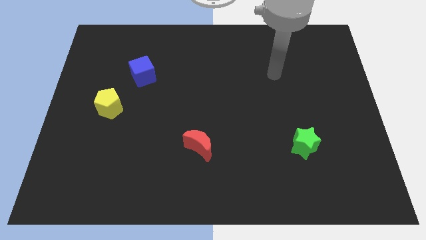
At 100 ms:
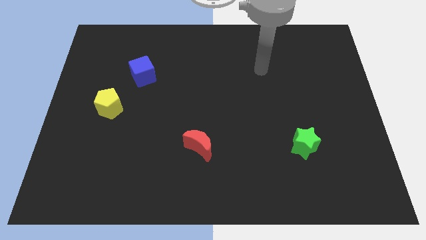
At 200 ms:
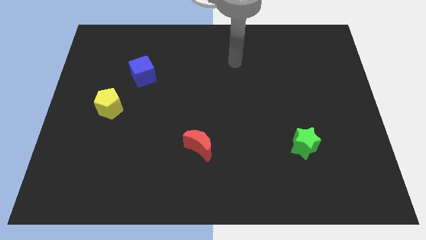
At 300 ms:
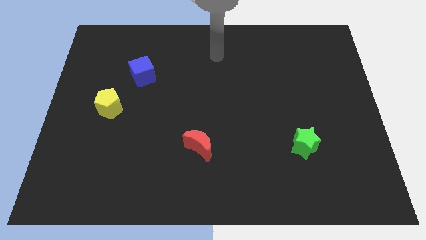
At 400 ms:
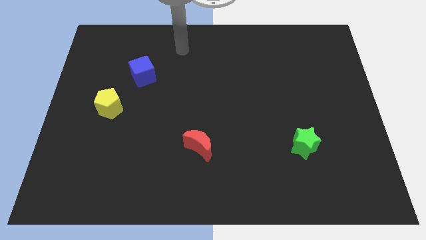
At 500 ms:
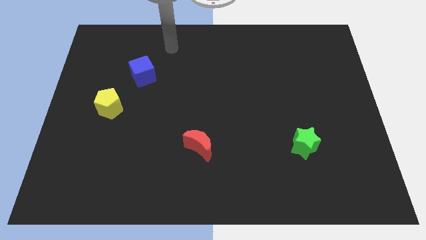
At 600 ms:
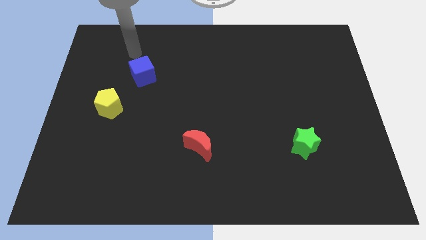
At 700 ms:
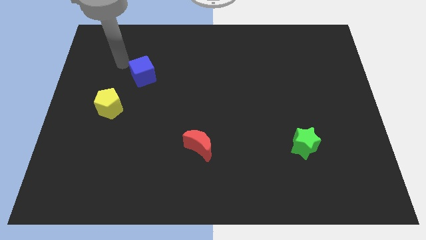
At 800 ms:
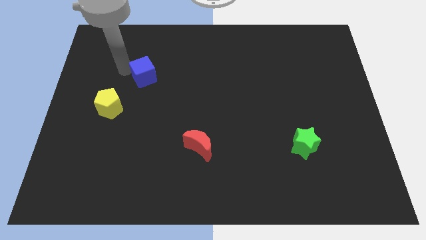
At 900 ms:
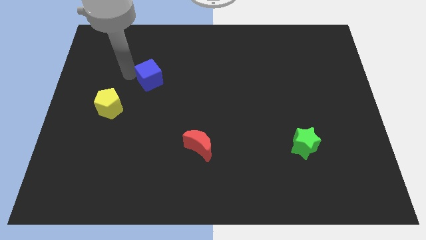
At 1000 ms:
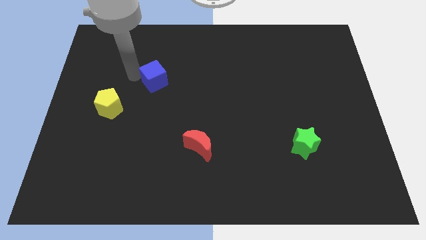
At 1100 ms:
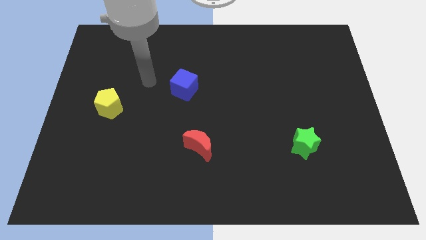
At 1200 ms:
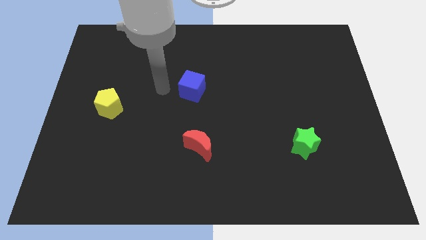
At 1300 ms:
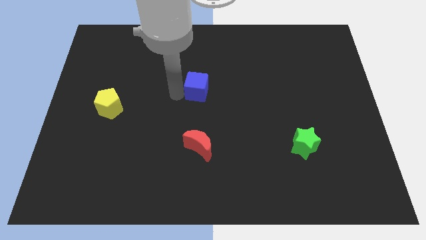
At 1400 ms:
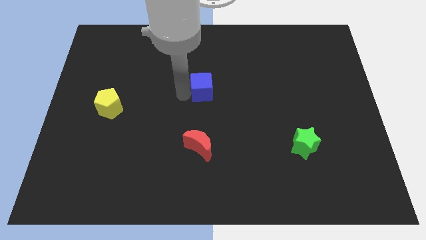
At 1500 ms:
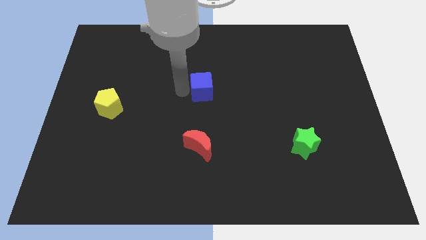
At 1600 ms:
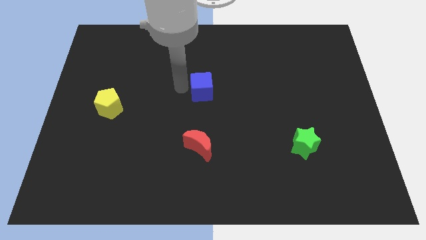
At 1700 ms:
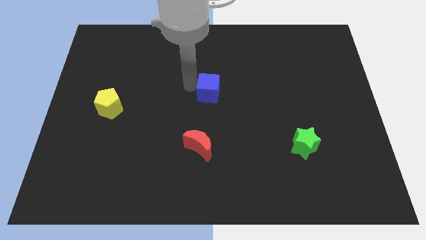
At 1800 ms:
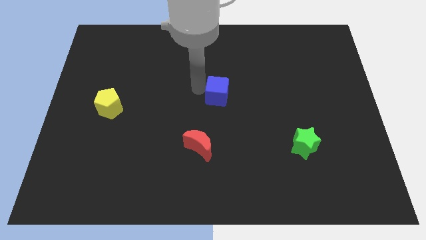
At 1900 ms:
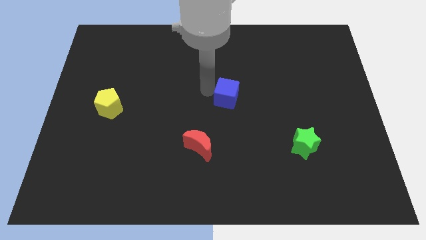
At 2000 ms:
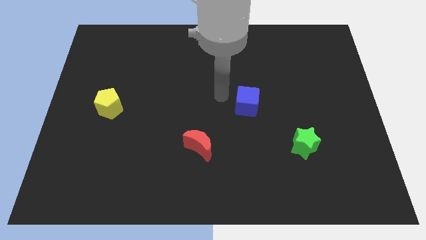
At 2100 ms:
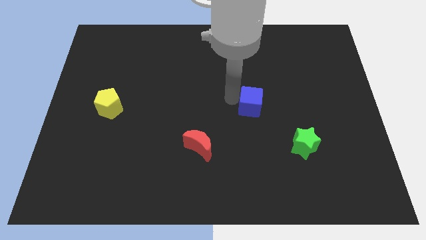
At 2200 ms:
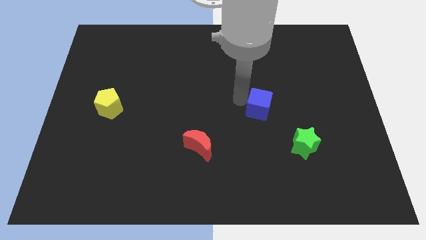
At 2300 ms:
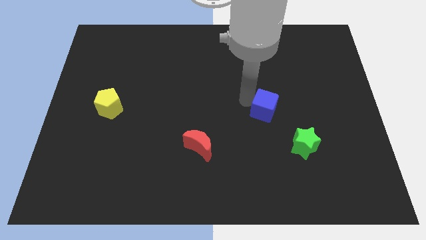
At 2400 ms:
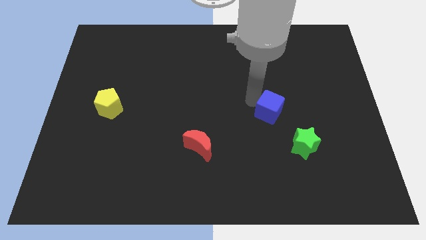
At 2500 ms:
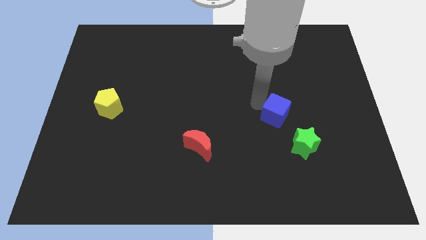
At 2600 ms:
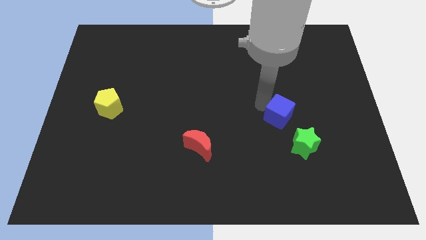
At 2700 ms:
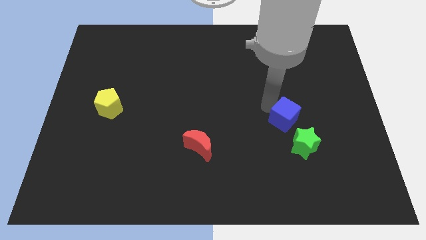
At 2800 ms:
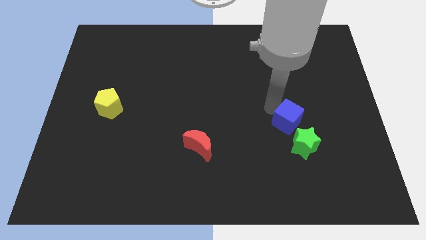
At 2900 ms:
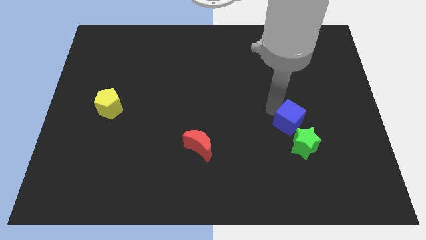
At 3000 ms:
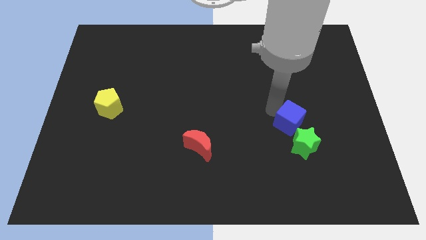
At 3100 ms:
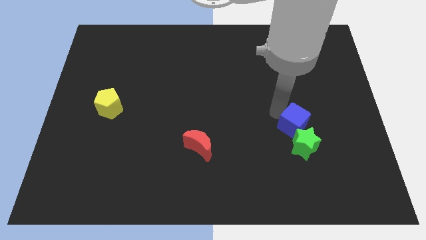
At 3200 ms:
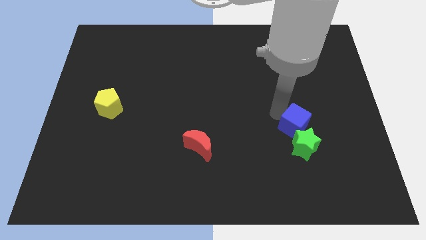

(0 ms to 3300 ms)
slide the cube close to the green star

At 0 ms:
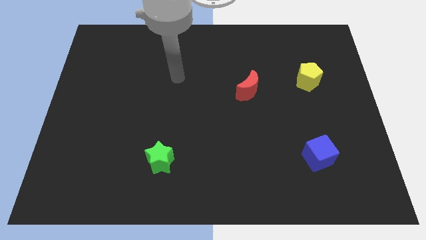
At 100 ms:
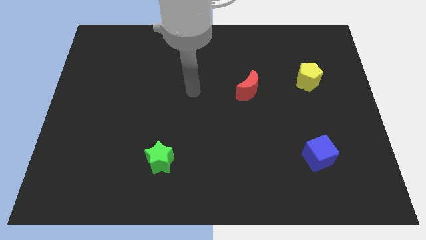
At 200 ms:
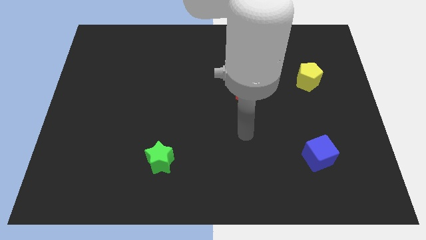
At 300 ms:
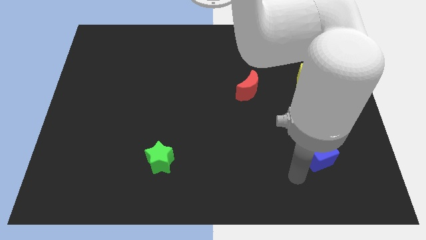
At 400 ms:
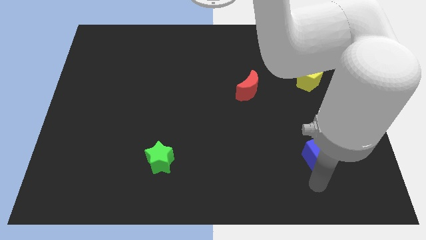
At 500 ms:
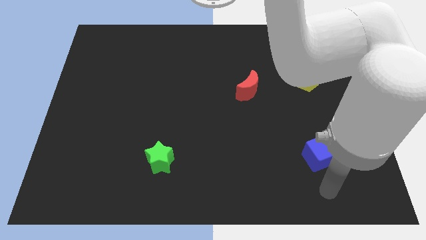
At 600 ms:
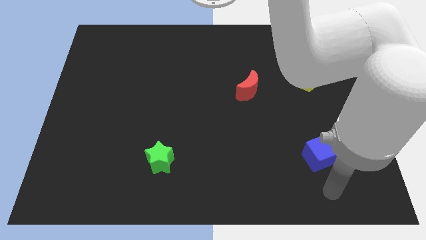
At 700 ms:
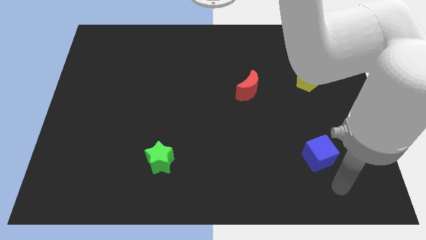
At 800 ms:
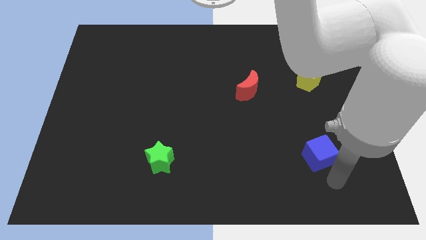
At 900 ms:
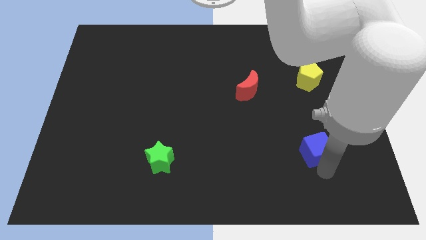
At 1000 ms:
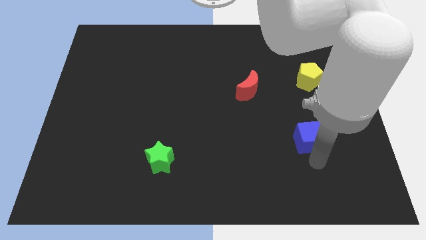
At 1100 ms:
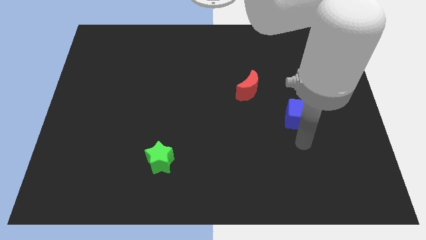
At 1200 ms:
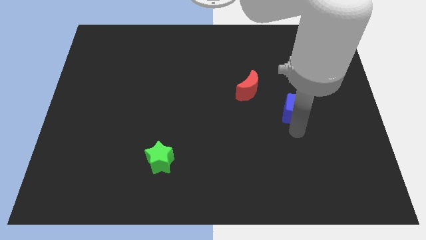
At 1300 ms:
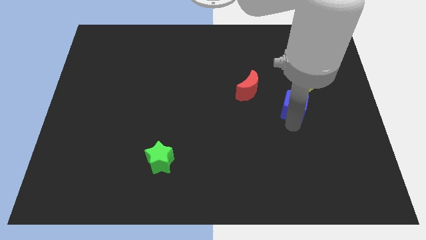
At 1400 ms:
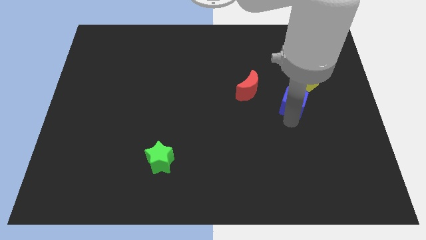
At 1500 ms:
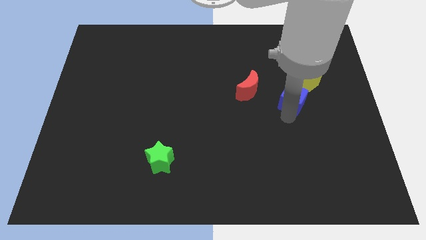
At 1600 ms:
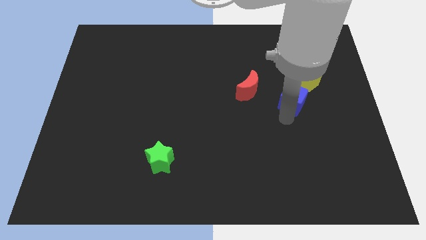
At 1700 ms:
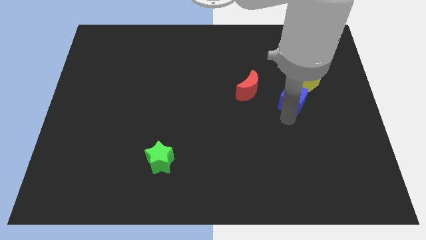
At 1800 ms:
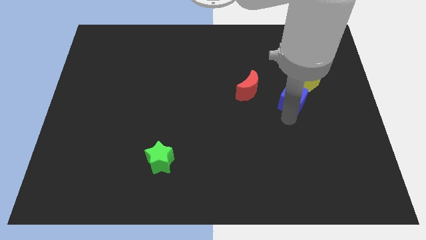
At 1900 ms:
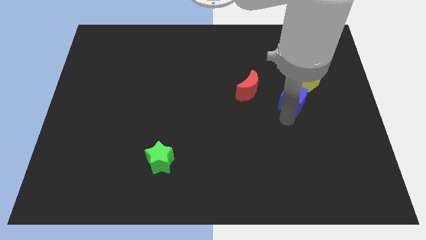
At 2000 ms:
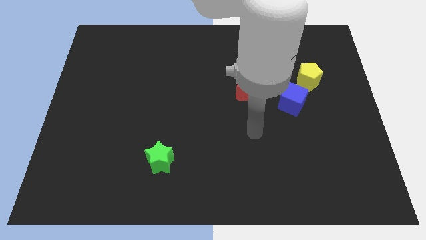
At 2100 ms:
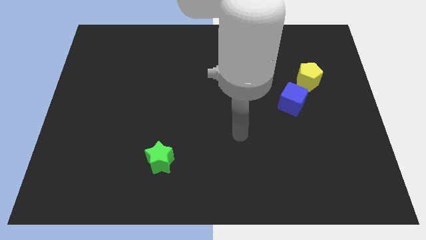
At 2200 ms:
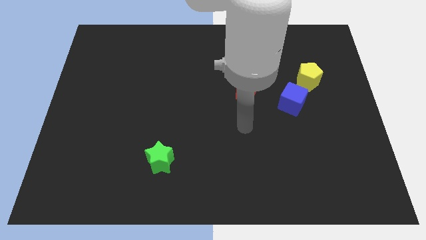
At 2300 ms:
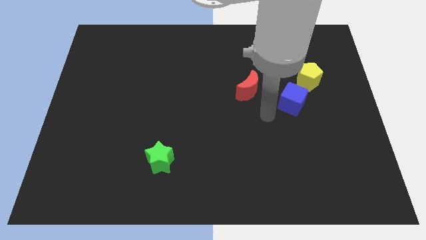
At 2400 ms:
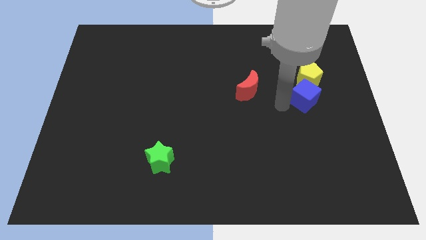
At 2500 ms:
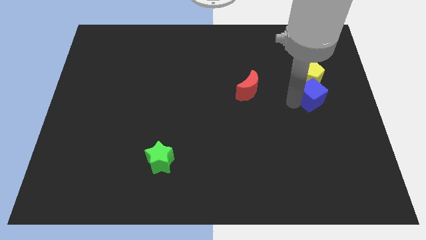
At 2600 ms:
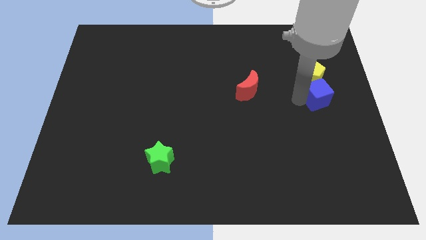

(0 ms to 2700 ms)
slide the cube next to the yellow pentagon

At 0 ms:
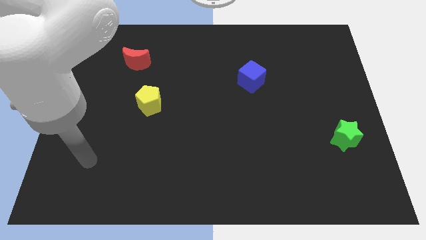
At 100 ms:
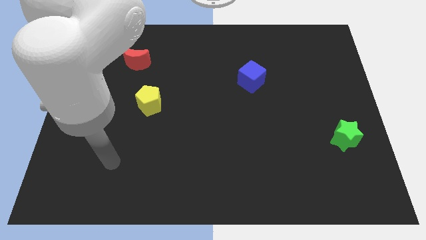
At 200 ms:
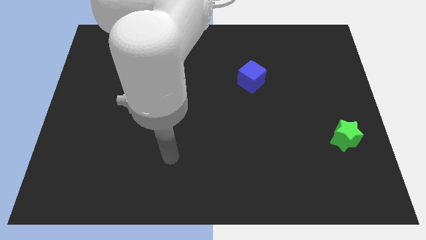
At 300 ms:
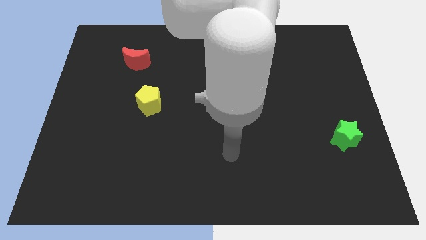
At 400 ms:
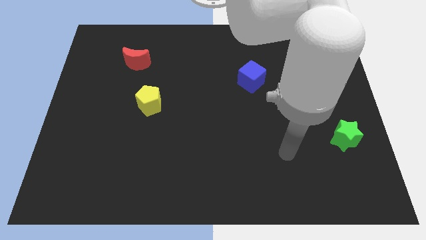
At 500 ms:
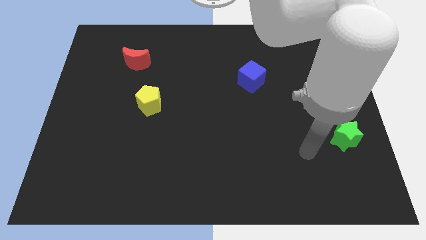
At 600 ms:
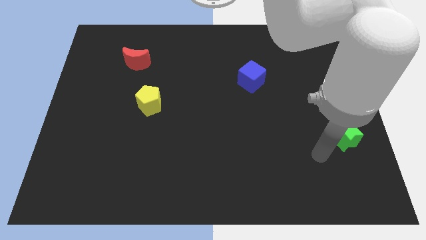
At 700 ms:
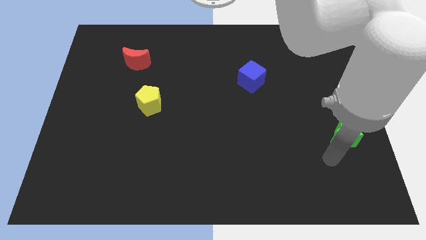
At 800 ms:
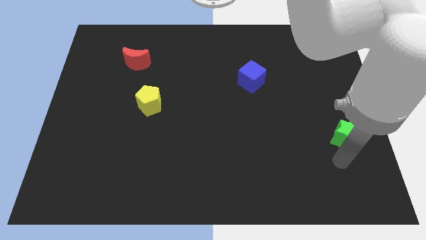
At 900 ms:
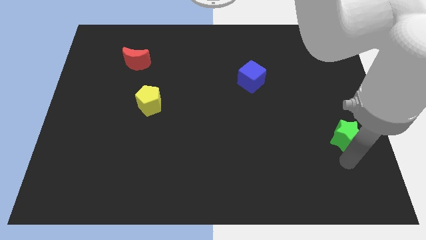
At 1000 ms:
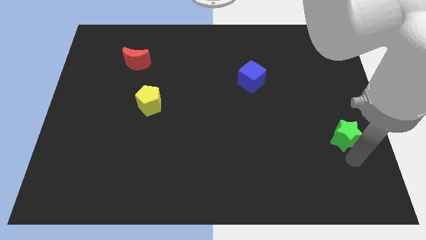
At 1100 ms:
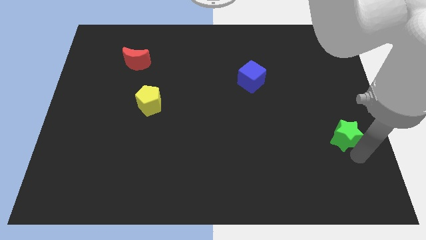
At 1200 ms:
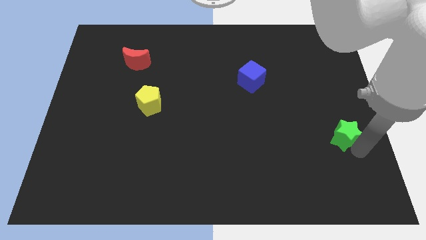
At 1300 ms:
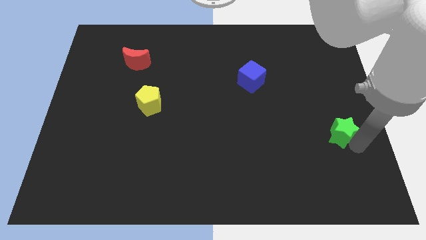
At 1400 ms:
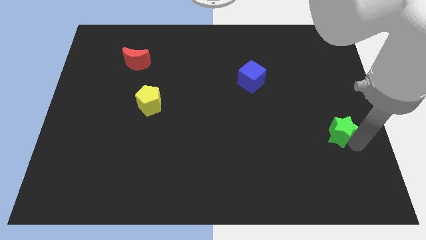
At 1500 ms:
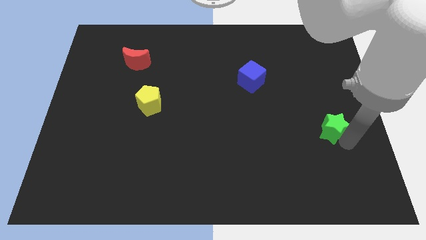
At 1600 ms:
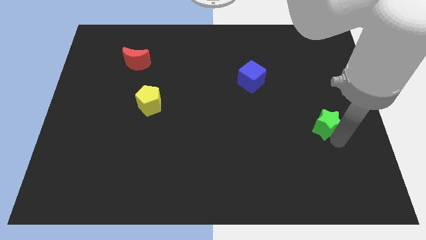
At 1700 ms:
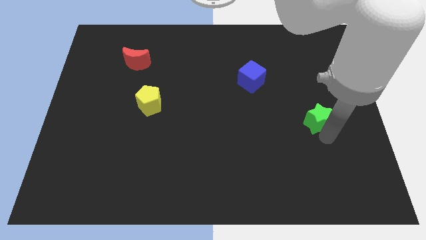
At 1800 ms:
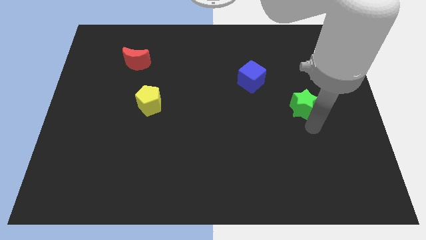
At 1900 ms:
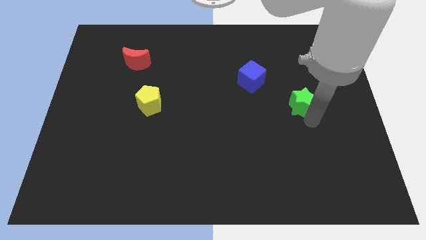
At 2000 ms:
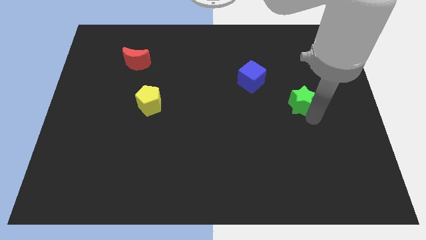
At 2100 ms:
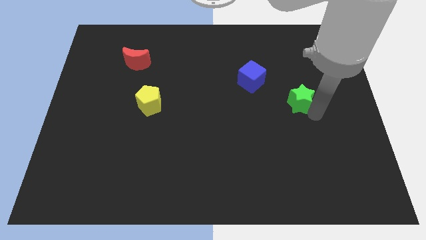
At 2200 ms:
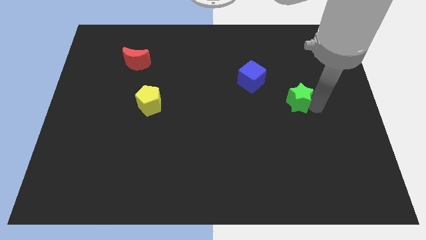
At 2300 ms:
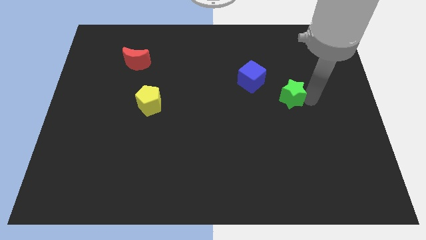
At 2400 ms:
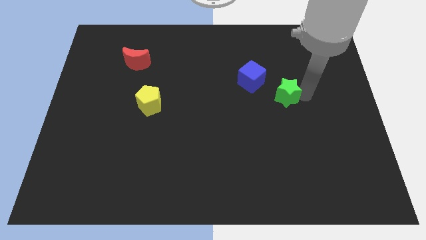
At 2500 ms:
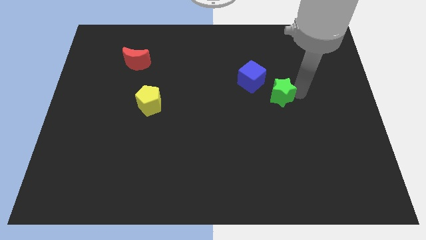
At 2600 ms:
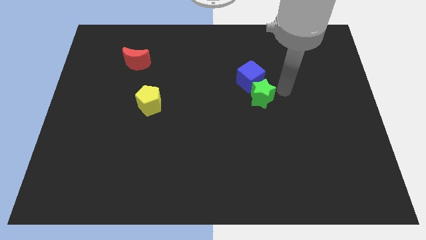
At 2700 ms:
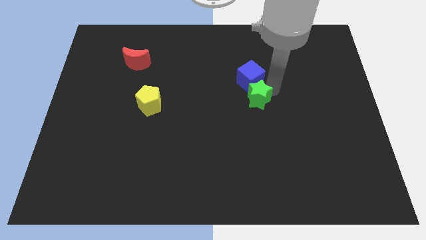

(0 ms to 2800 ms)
put the green block close to the cube

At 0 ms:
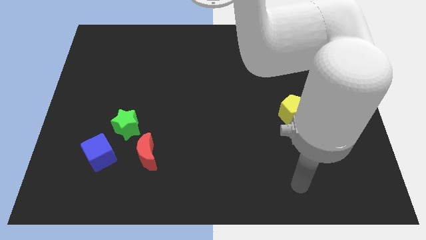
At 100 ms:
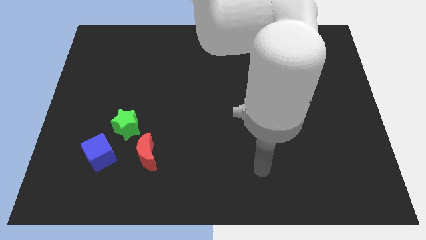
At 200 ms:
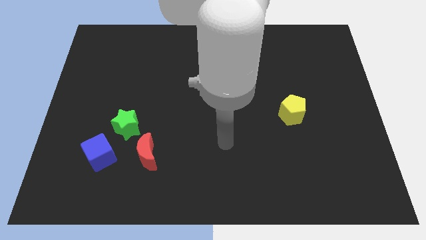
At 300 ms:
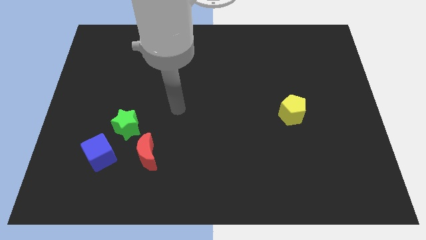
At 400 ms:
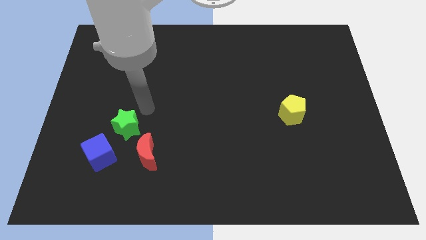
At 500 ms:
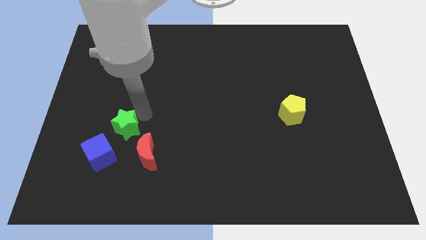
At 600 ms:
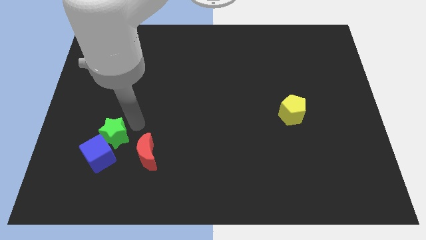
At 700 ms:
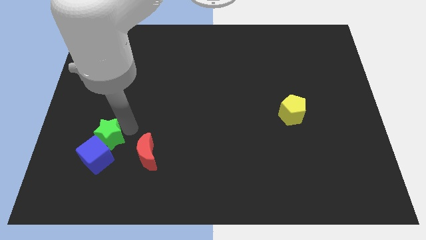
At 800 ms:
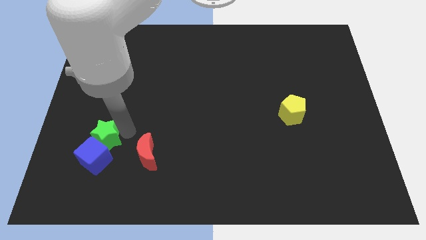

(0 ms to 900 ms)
move the star close to the cube
